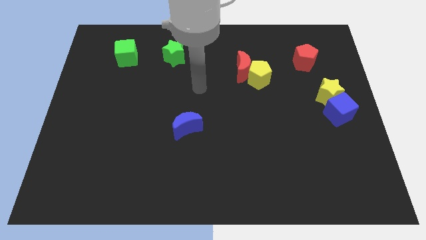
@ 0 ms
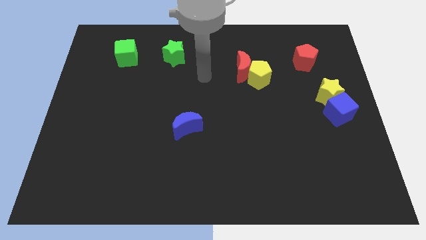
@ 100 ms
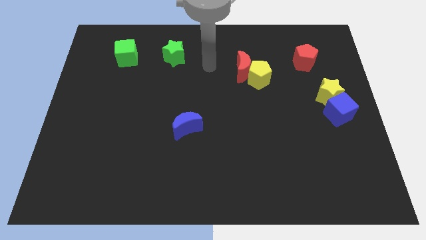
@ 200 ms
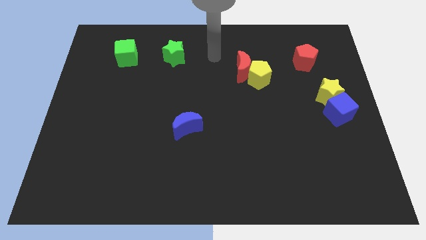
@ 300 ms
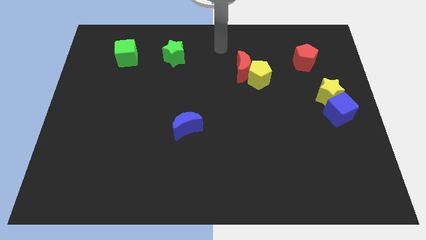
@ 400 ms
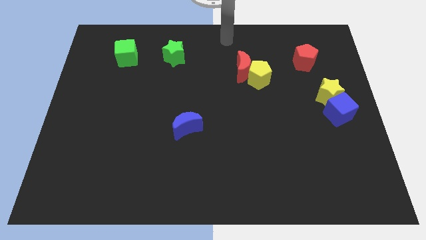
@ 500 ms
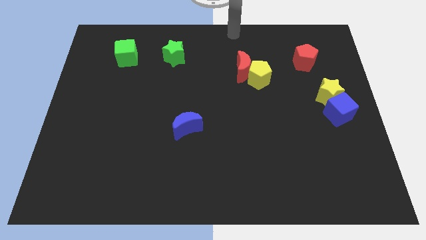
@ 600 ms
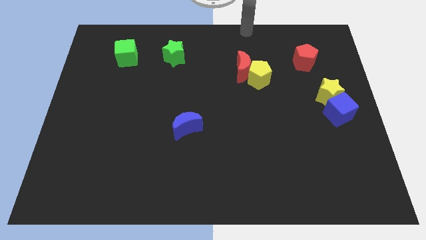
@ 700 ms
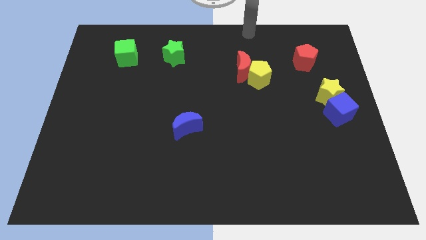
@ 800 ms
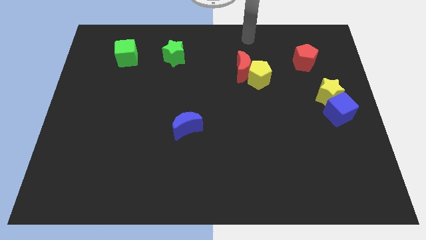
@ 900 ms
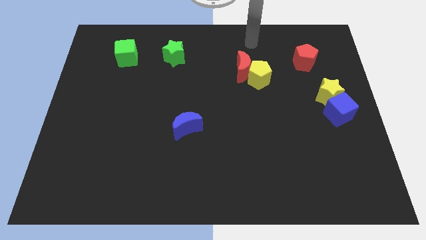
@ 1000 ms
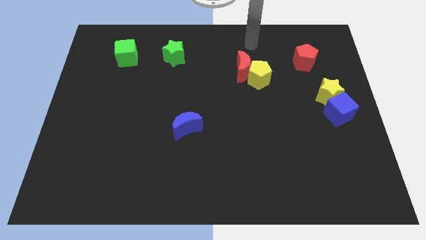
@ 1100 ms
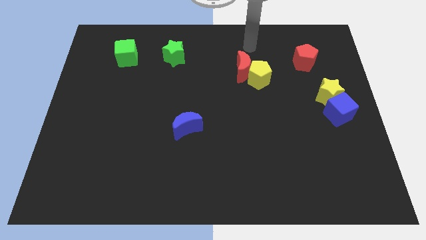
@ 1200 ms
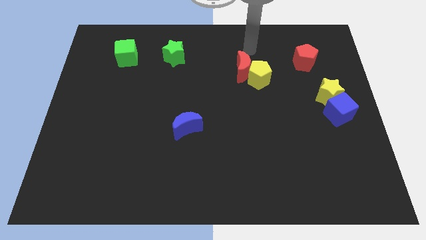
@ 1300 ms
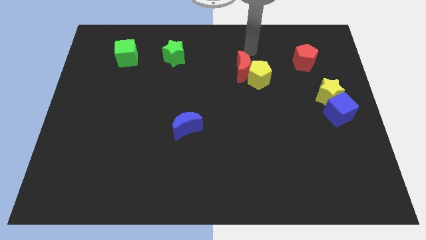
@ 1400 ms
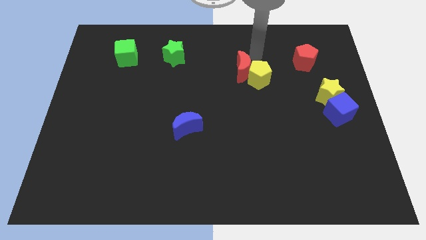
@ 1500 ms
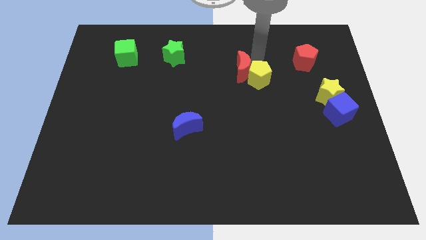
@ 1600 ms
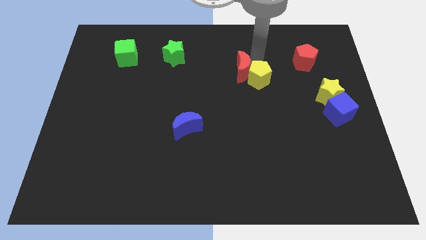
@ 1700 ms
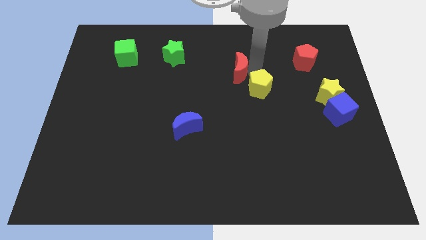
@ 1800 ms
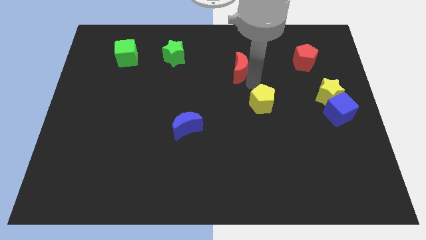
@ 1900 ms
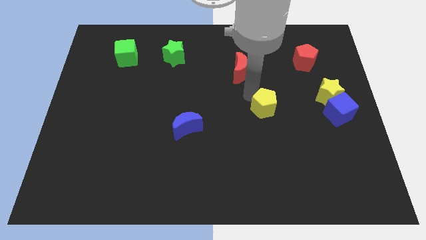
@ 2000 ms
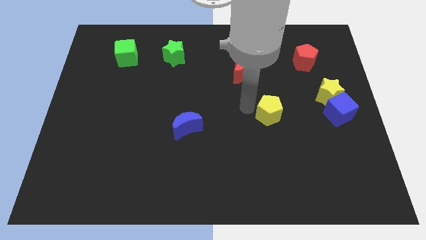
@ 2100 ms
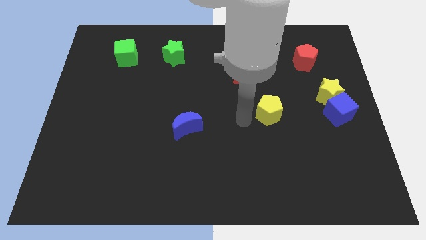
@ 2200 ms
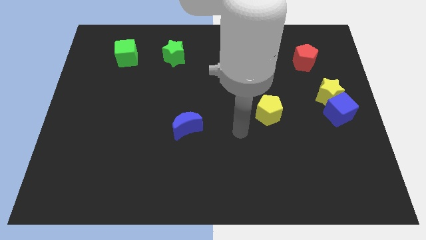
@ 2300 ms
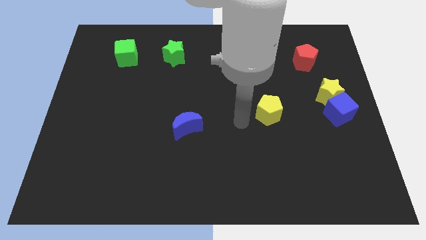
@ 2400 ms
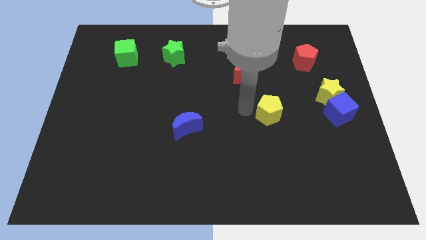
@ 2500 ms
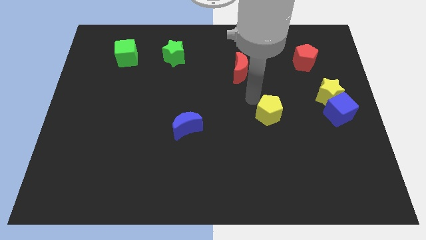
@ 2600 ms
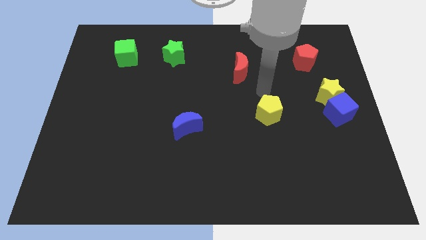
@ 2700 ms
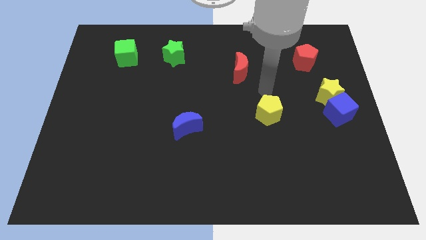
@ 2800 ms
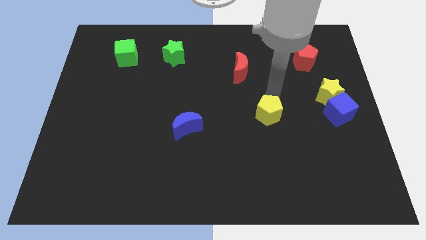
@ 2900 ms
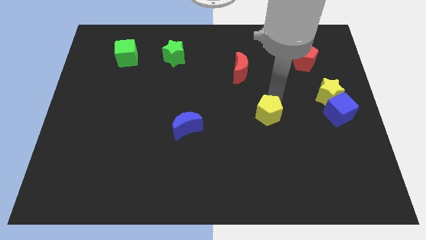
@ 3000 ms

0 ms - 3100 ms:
place the yellow pentagon in between the blue cube and blue moon

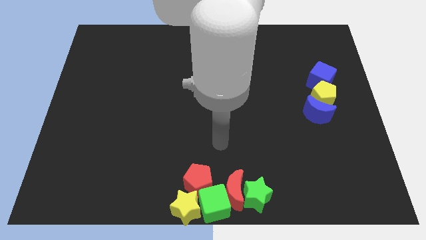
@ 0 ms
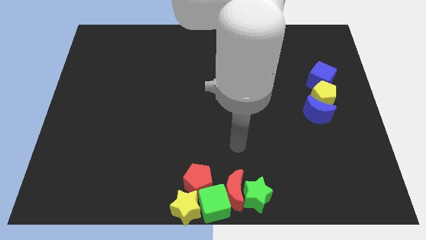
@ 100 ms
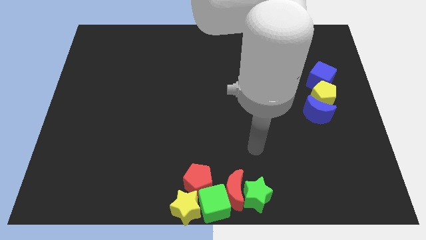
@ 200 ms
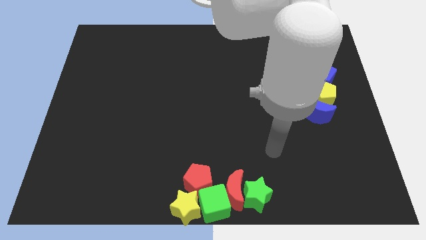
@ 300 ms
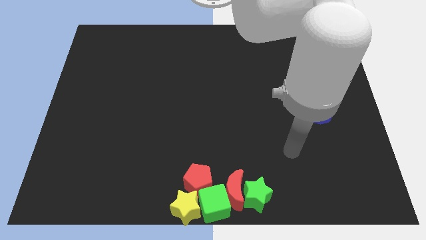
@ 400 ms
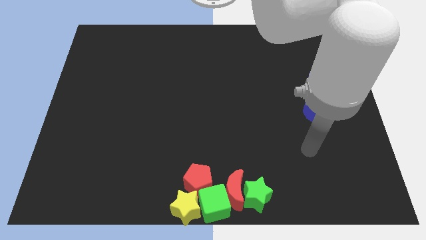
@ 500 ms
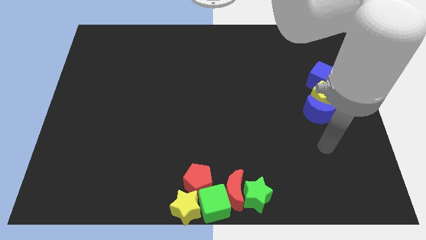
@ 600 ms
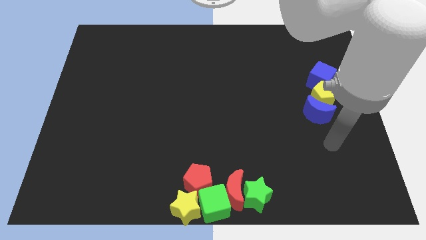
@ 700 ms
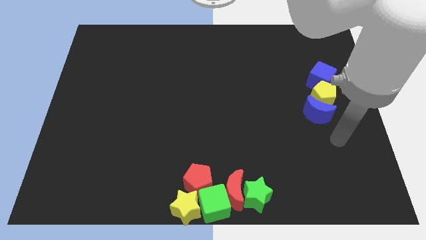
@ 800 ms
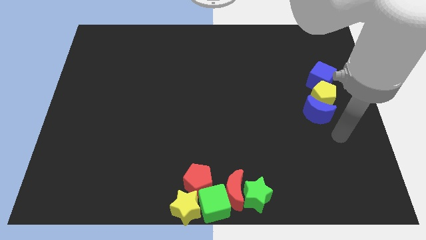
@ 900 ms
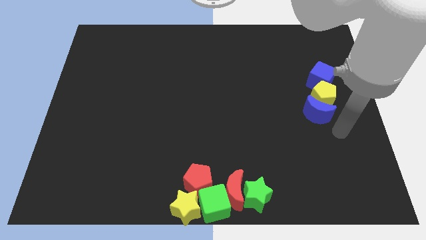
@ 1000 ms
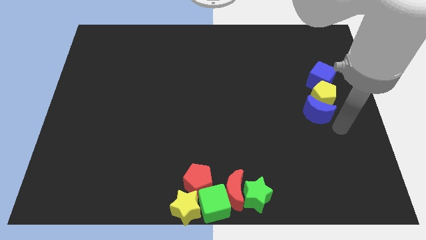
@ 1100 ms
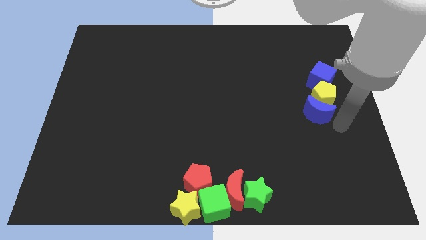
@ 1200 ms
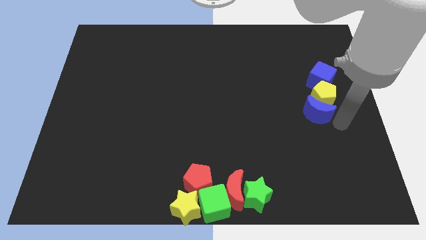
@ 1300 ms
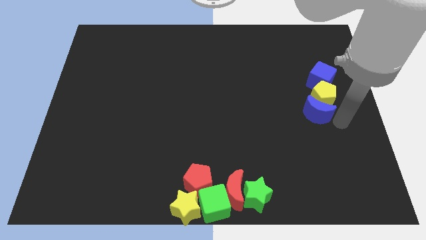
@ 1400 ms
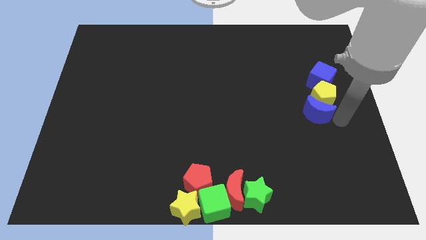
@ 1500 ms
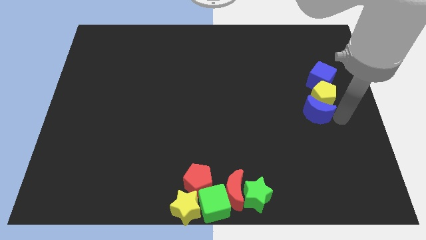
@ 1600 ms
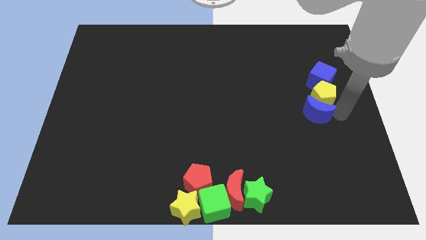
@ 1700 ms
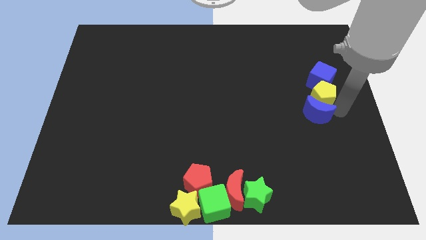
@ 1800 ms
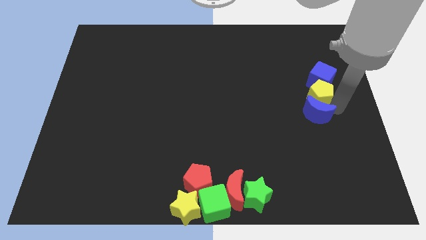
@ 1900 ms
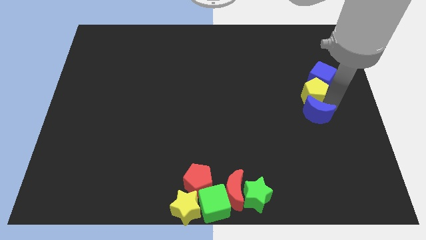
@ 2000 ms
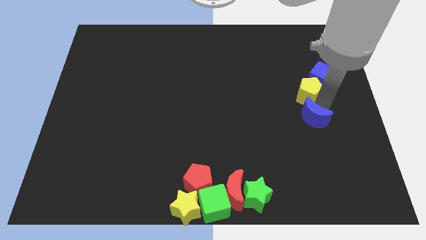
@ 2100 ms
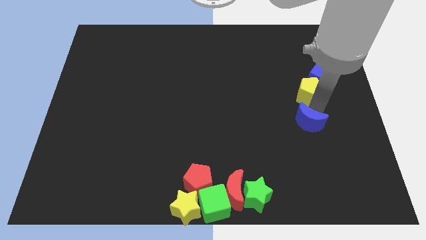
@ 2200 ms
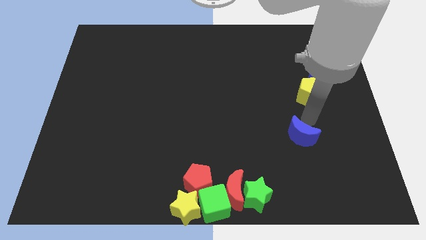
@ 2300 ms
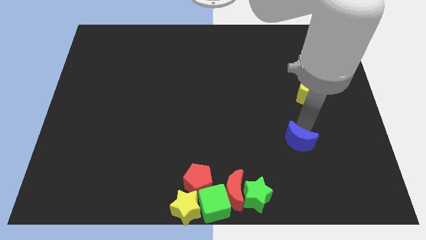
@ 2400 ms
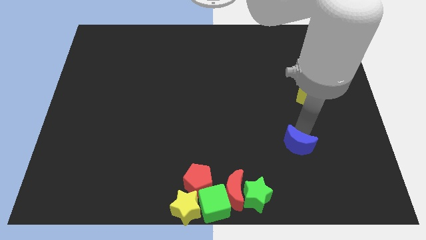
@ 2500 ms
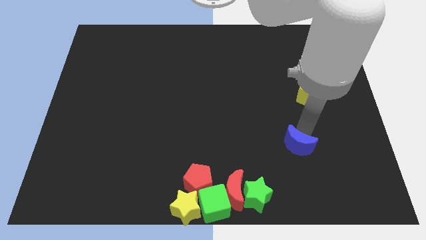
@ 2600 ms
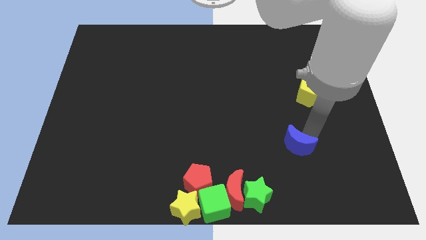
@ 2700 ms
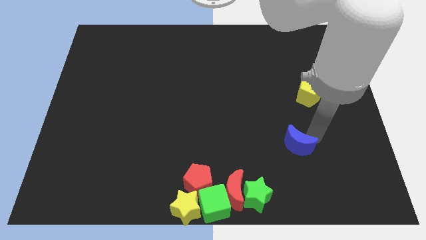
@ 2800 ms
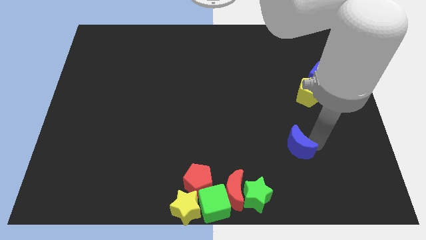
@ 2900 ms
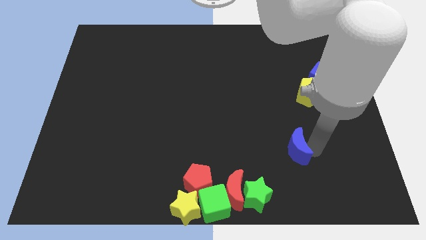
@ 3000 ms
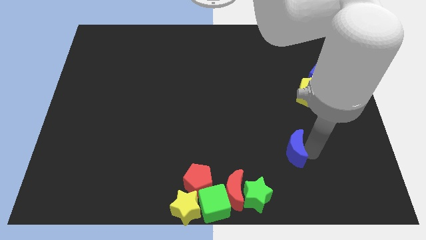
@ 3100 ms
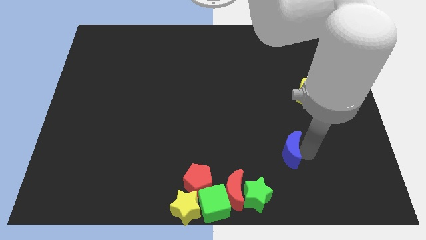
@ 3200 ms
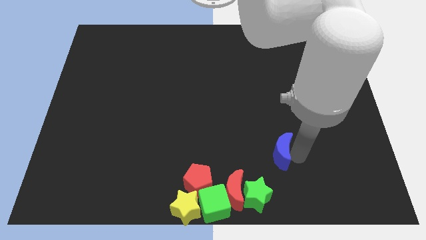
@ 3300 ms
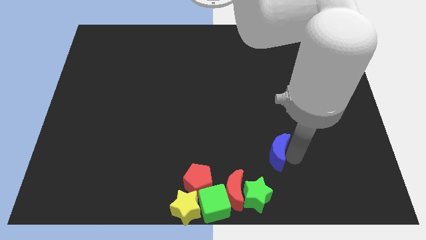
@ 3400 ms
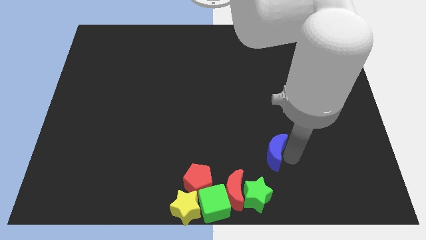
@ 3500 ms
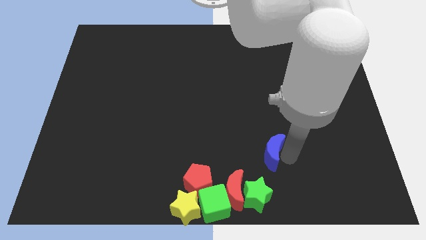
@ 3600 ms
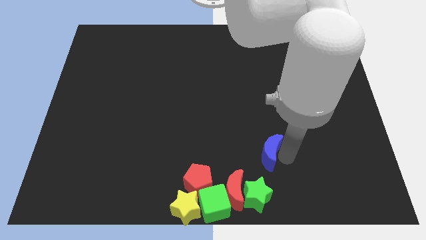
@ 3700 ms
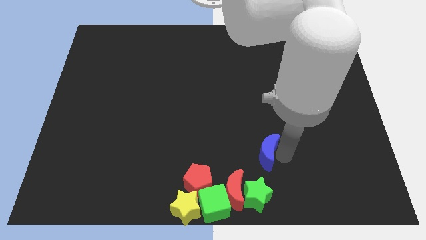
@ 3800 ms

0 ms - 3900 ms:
separate blue moon from the yellow pentagon

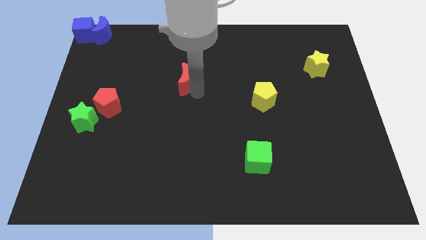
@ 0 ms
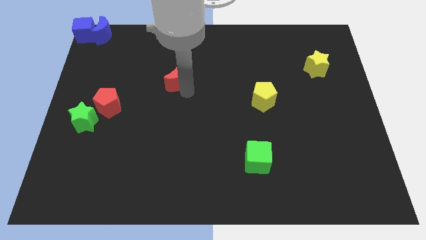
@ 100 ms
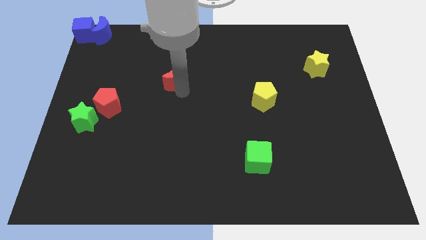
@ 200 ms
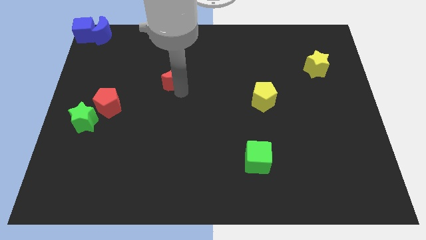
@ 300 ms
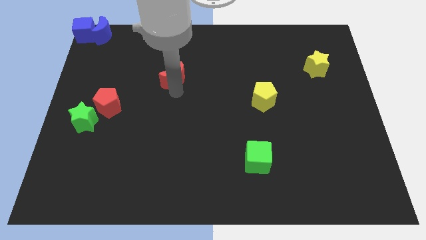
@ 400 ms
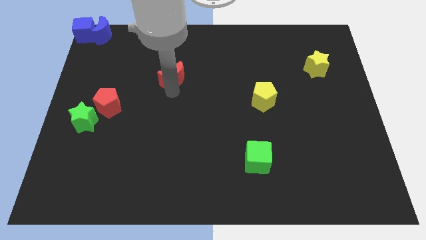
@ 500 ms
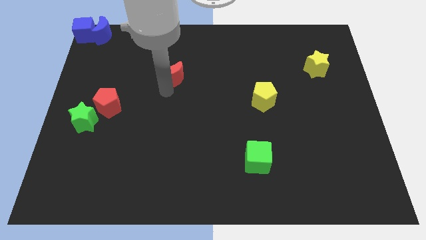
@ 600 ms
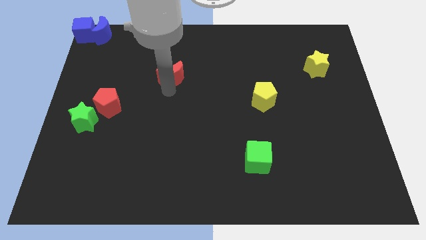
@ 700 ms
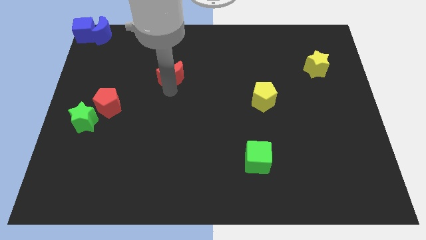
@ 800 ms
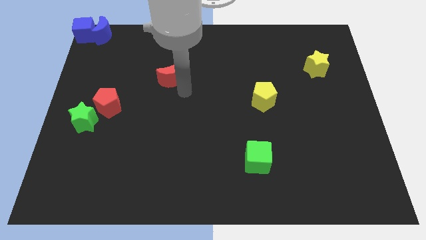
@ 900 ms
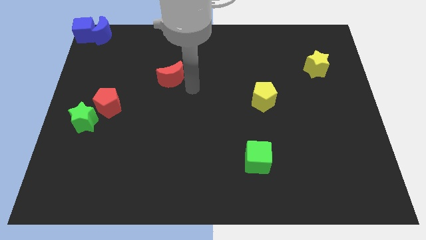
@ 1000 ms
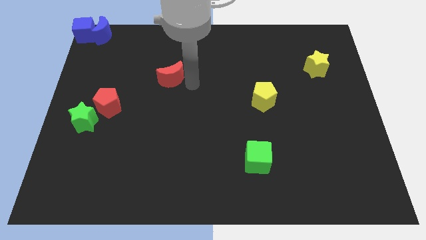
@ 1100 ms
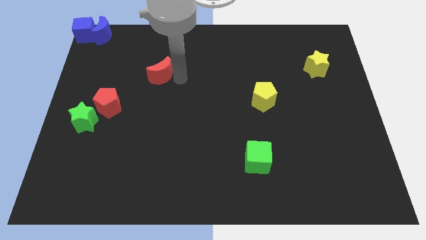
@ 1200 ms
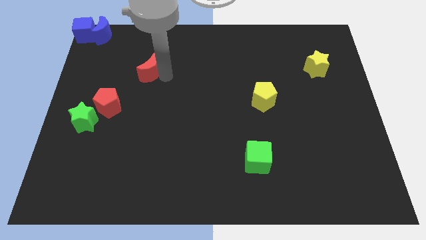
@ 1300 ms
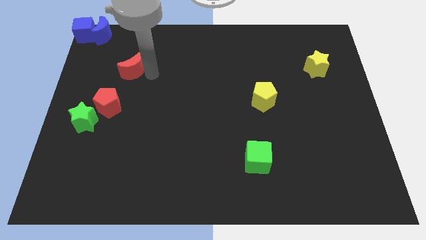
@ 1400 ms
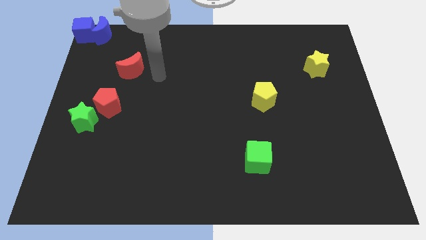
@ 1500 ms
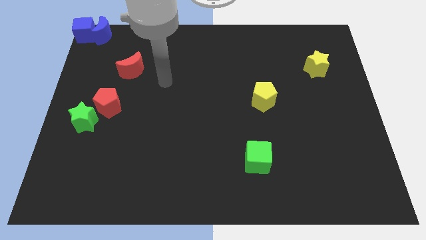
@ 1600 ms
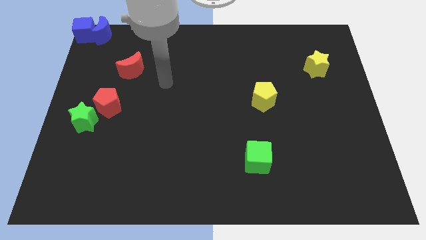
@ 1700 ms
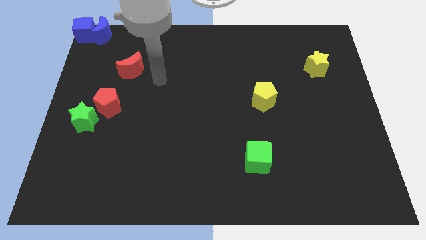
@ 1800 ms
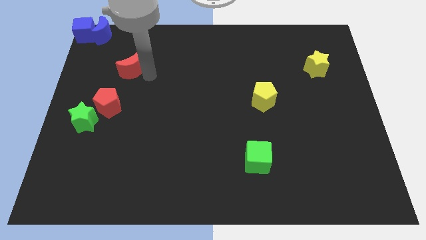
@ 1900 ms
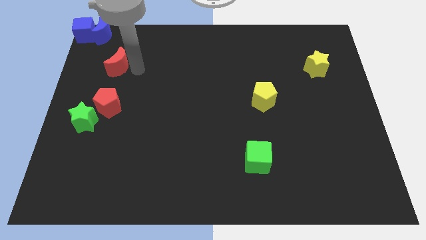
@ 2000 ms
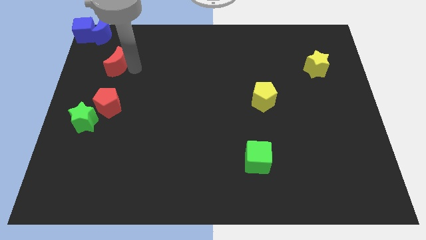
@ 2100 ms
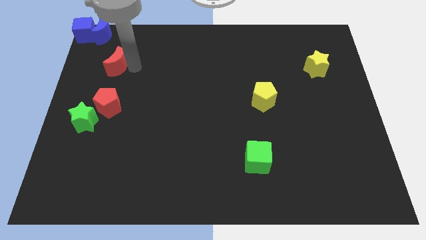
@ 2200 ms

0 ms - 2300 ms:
move the red crescent to the top of the red pentagon
